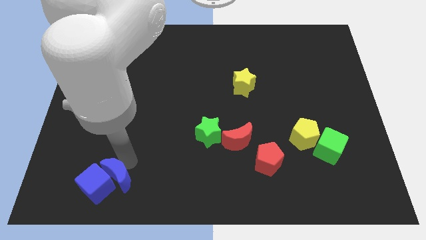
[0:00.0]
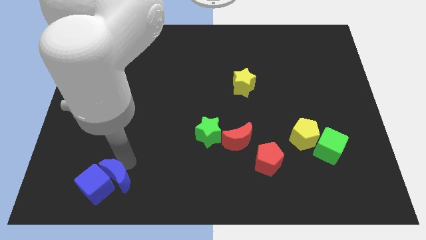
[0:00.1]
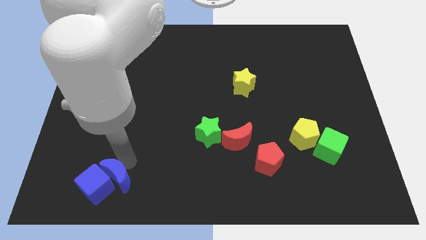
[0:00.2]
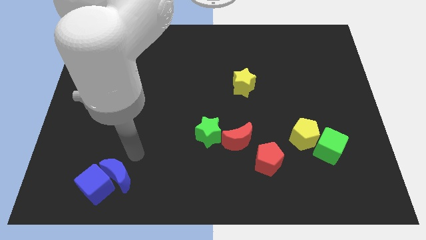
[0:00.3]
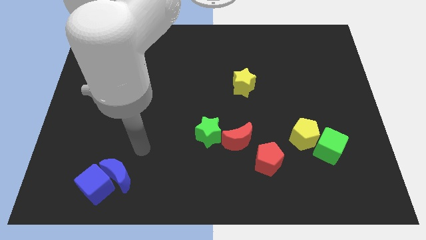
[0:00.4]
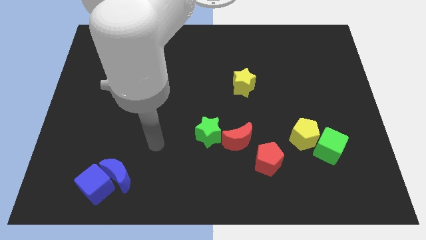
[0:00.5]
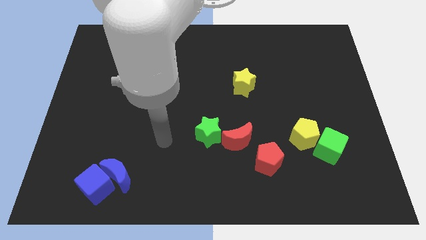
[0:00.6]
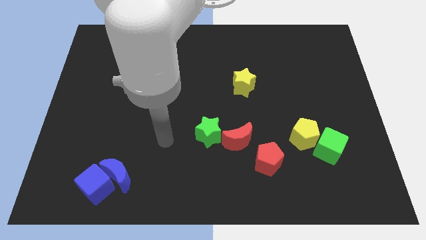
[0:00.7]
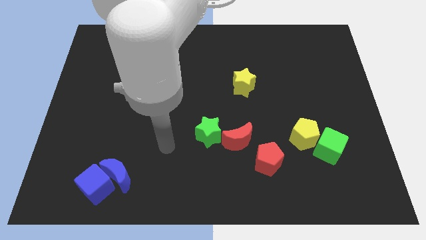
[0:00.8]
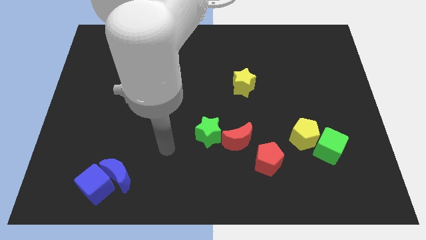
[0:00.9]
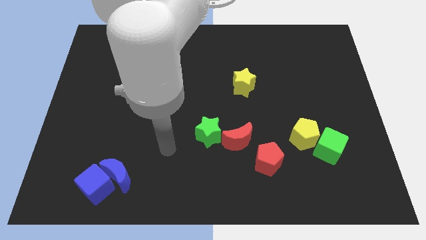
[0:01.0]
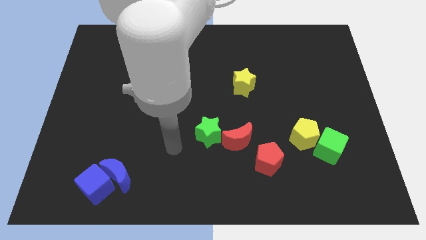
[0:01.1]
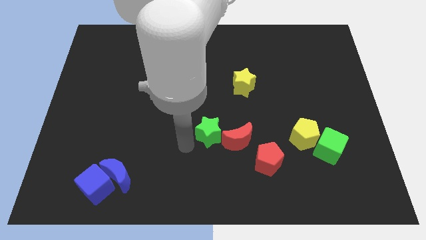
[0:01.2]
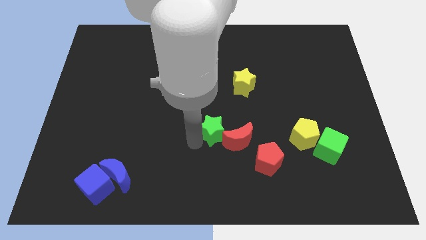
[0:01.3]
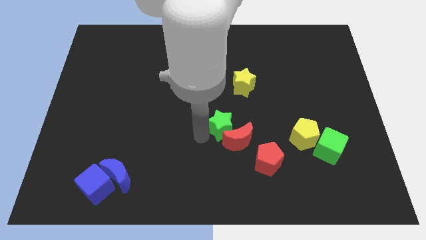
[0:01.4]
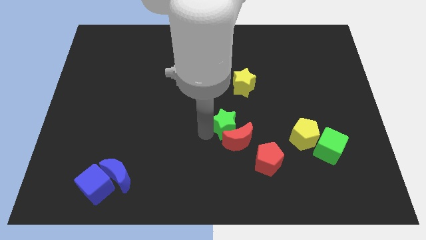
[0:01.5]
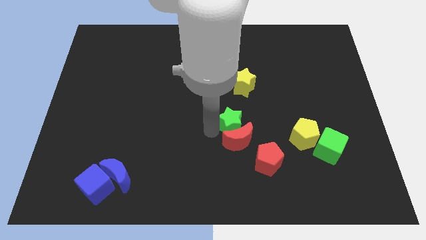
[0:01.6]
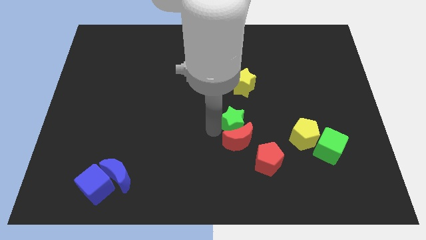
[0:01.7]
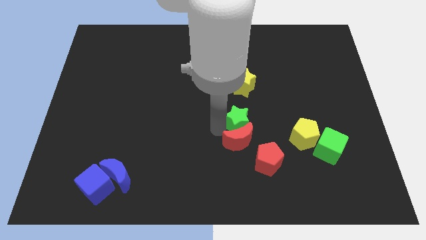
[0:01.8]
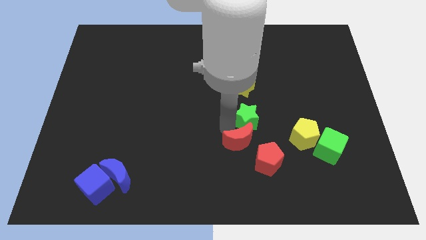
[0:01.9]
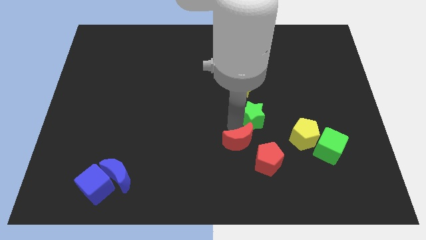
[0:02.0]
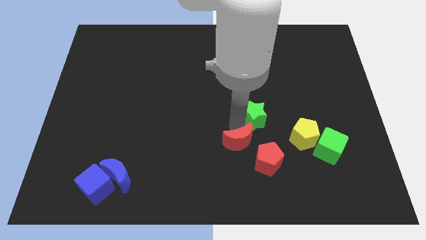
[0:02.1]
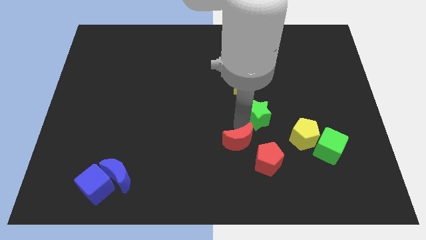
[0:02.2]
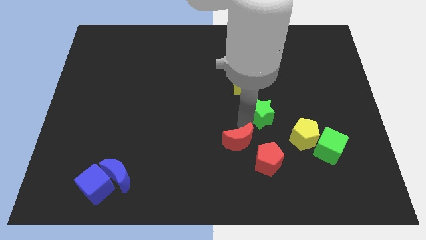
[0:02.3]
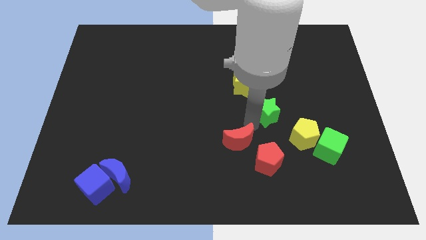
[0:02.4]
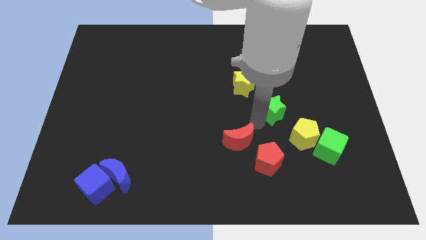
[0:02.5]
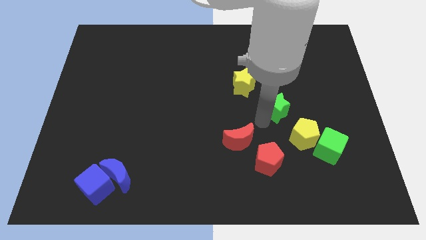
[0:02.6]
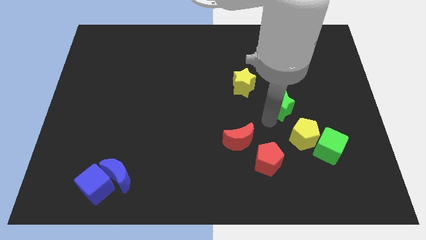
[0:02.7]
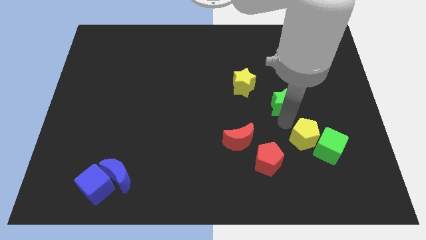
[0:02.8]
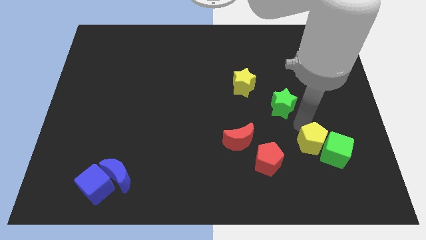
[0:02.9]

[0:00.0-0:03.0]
place the green star in between the yellow star and yellow pentagon

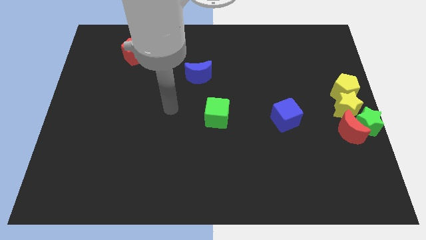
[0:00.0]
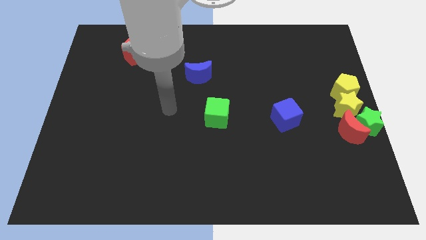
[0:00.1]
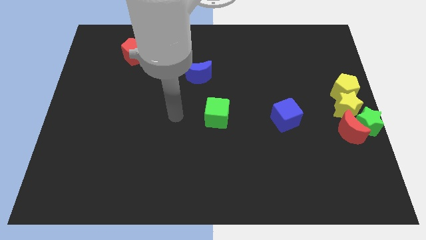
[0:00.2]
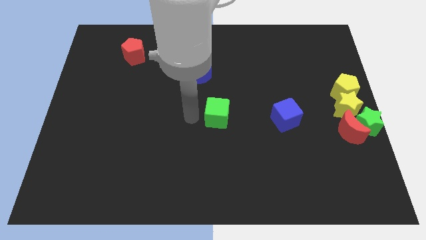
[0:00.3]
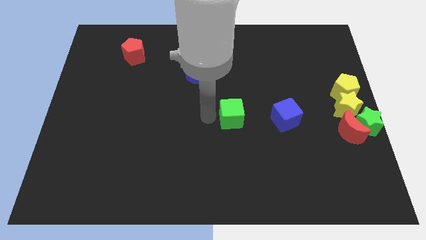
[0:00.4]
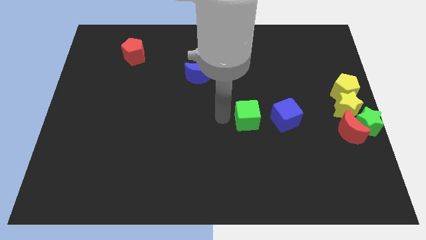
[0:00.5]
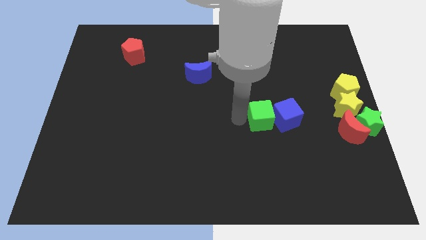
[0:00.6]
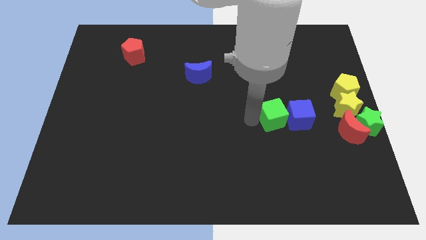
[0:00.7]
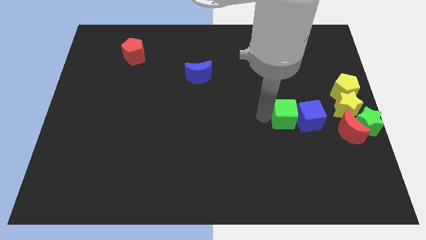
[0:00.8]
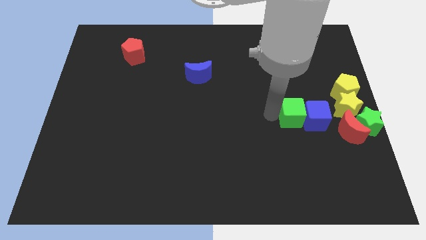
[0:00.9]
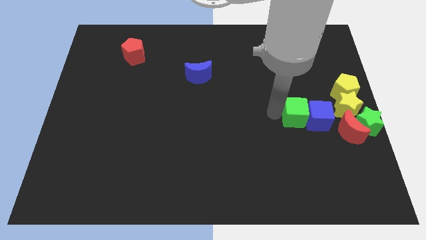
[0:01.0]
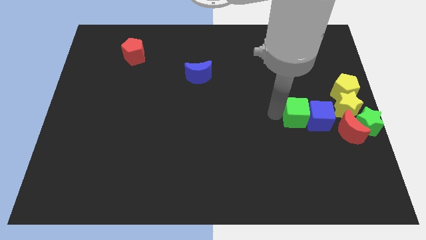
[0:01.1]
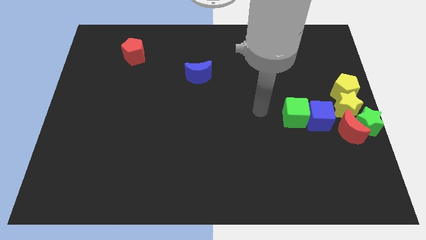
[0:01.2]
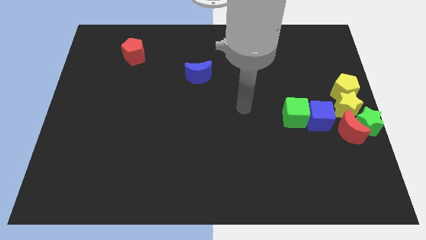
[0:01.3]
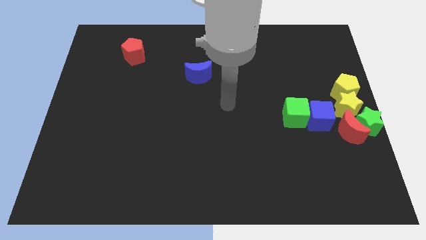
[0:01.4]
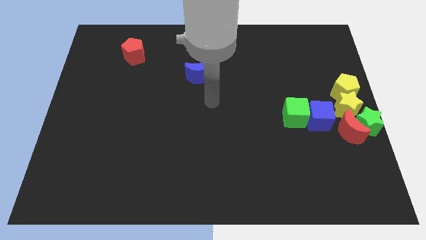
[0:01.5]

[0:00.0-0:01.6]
move the green cube along with blue cube to the left of the group of blocks

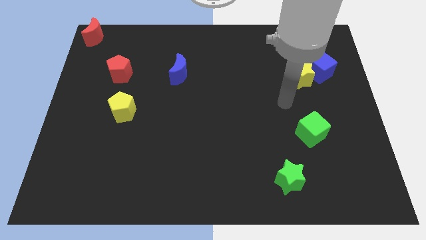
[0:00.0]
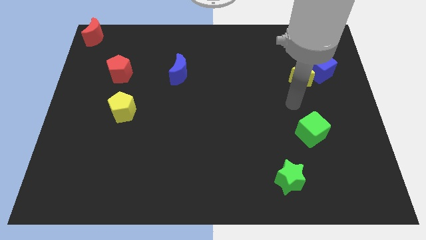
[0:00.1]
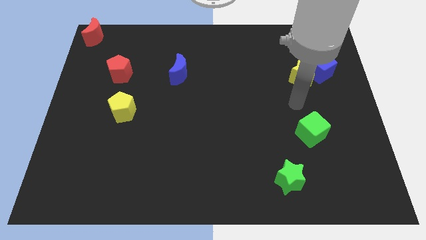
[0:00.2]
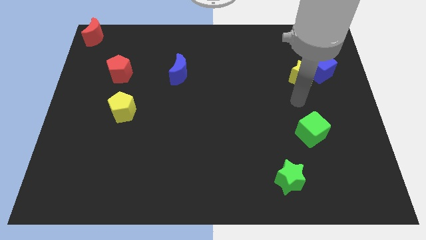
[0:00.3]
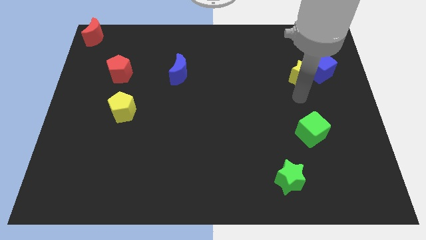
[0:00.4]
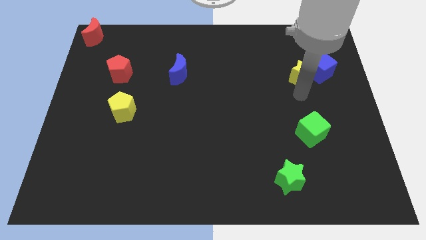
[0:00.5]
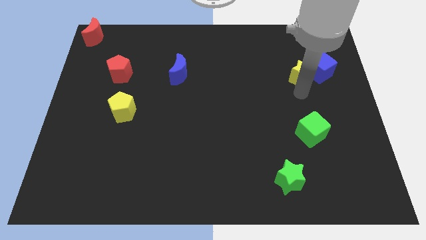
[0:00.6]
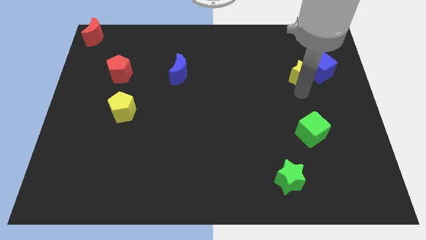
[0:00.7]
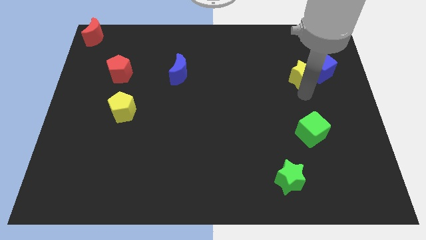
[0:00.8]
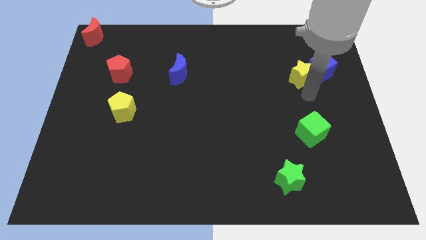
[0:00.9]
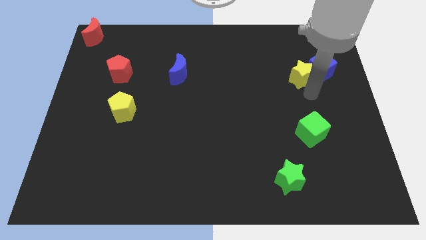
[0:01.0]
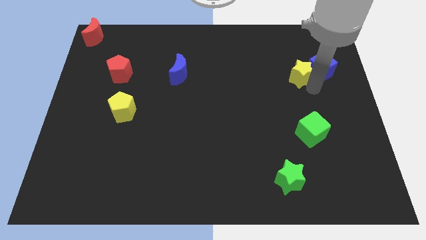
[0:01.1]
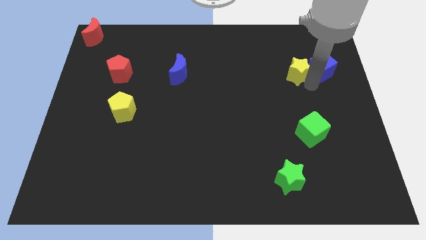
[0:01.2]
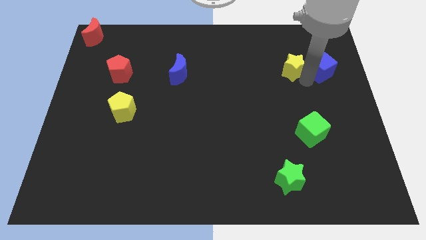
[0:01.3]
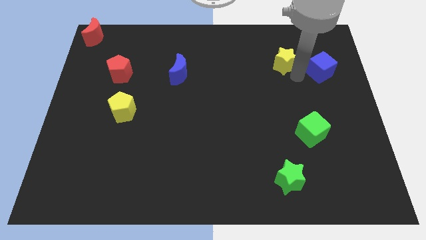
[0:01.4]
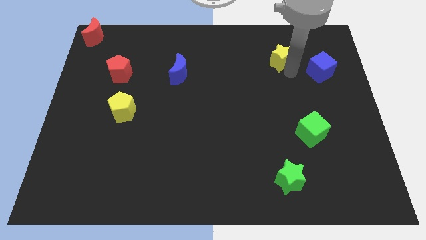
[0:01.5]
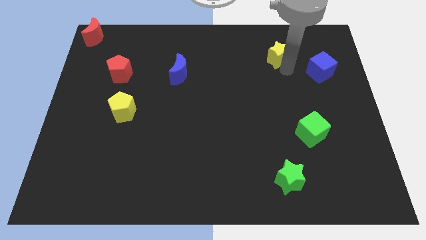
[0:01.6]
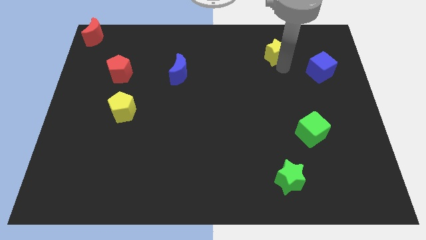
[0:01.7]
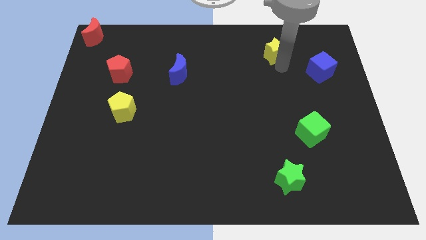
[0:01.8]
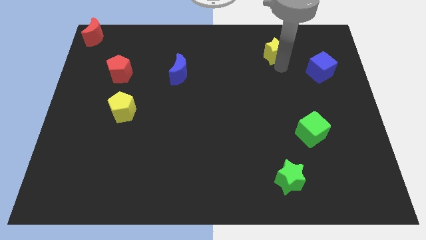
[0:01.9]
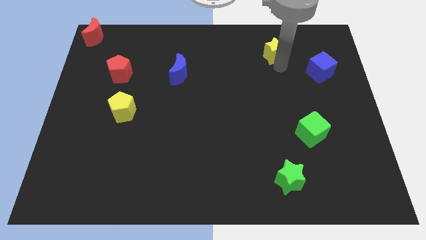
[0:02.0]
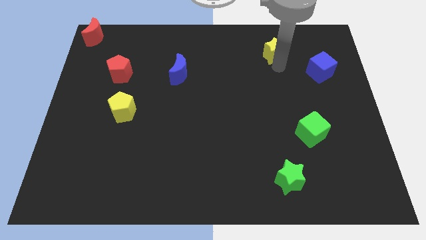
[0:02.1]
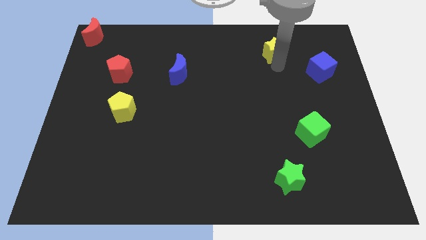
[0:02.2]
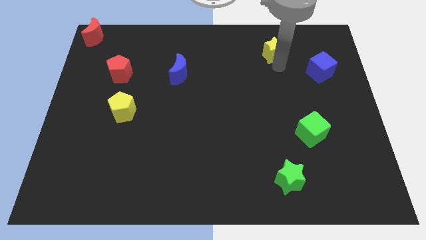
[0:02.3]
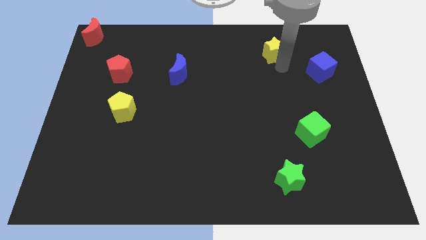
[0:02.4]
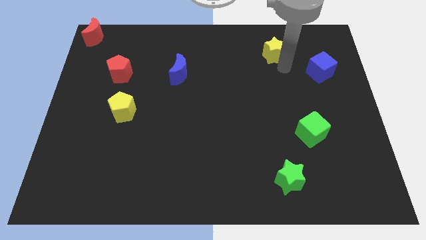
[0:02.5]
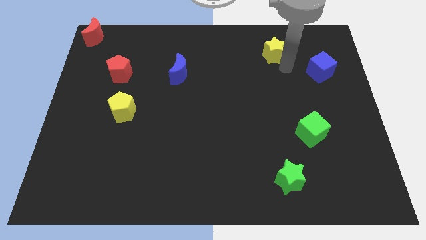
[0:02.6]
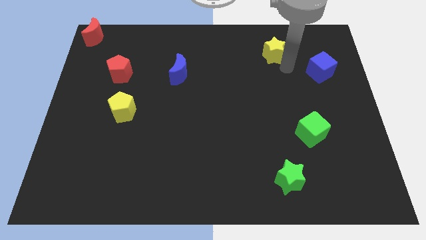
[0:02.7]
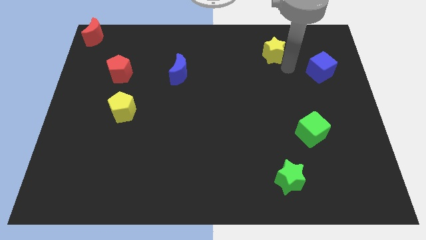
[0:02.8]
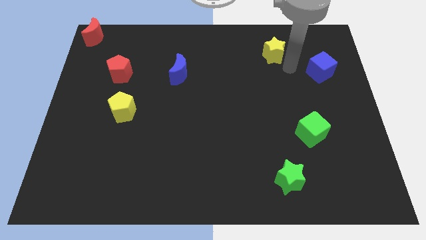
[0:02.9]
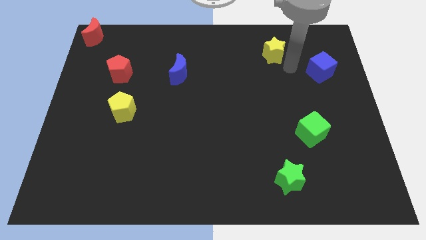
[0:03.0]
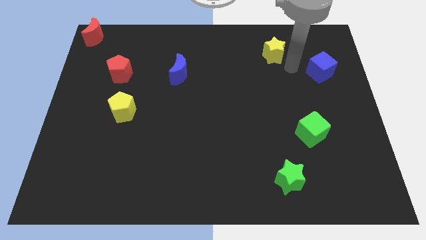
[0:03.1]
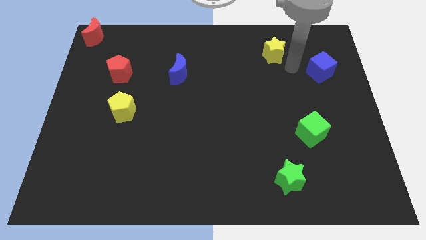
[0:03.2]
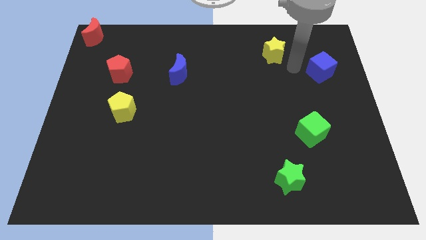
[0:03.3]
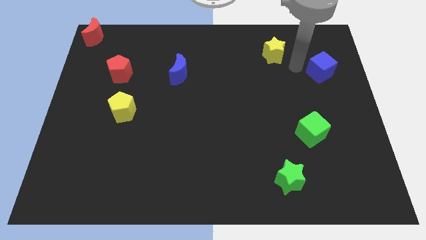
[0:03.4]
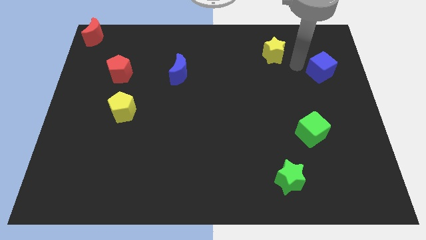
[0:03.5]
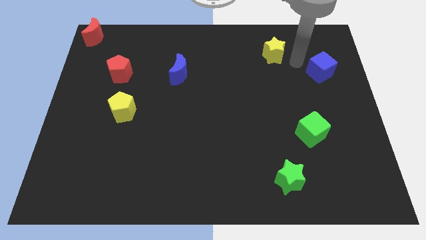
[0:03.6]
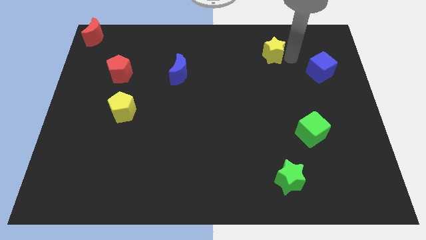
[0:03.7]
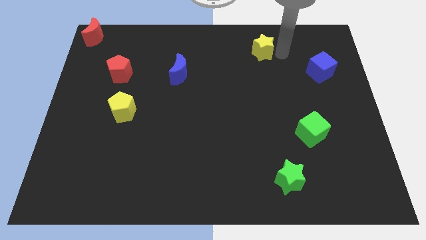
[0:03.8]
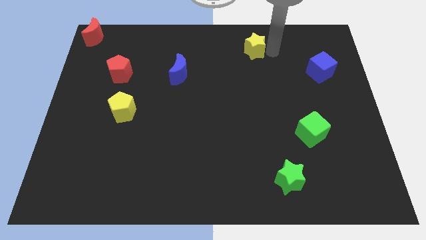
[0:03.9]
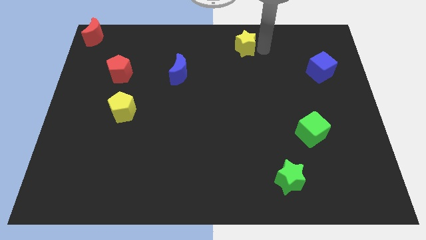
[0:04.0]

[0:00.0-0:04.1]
slide the yellow star towards the top center of the board

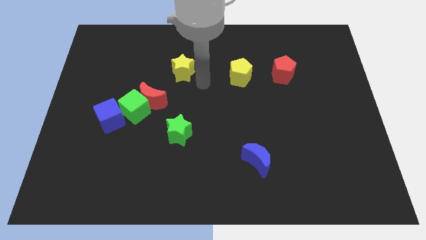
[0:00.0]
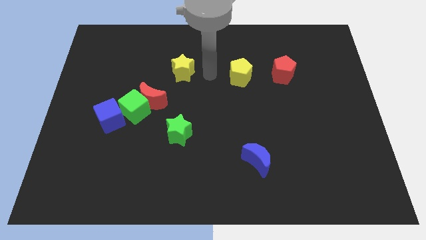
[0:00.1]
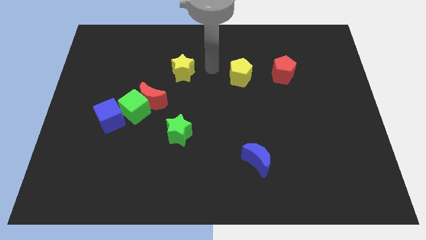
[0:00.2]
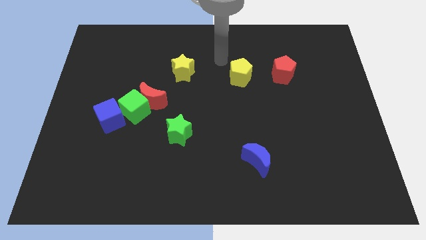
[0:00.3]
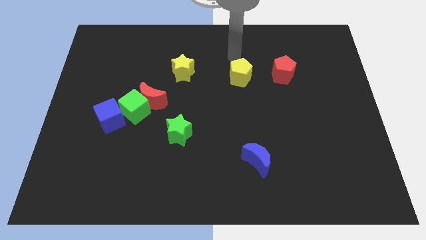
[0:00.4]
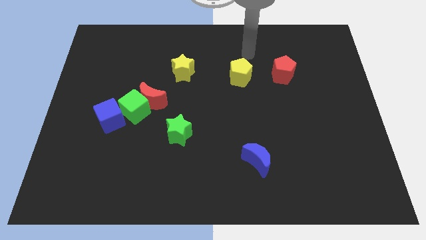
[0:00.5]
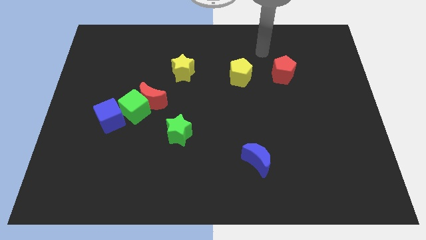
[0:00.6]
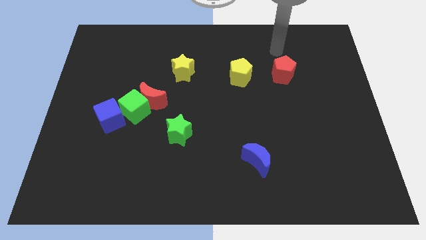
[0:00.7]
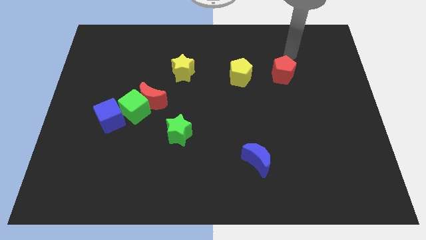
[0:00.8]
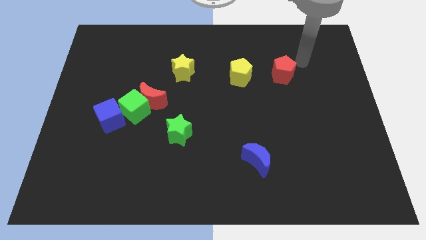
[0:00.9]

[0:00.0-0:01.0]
point your arm at the top of the red pentagon
